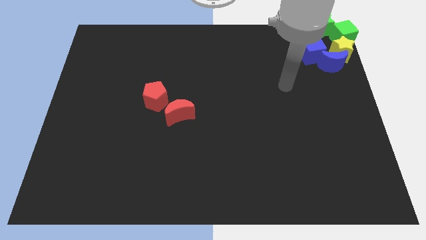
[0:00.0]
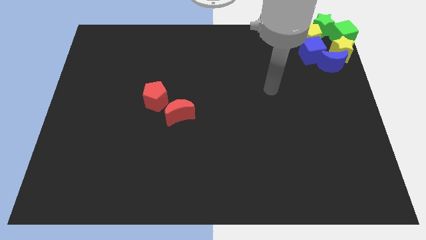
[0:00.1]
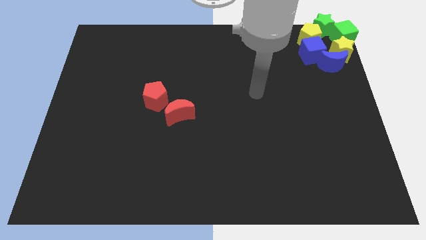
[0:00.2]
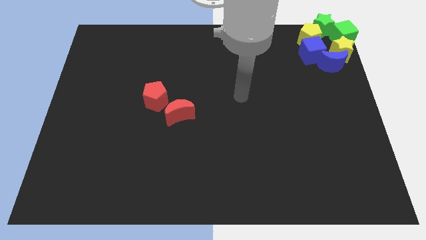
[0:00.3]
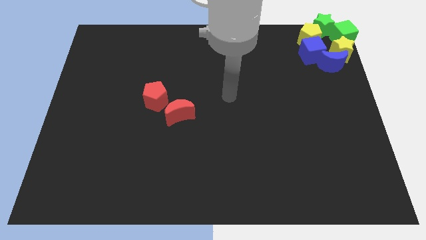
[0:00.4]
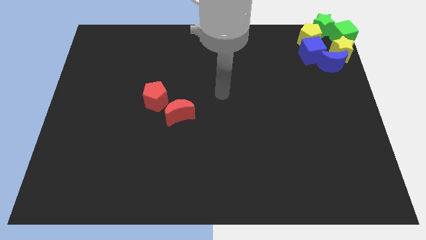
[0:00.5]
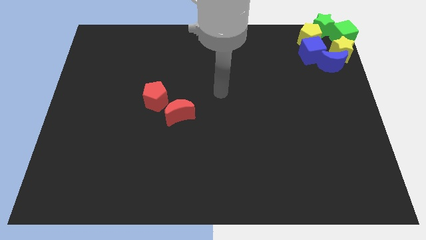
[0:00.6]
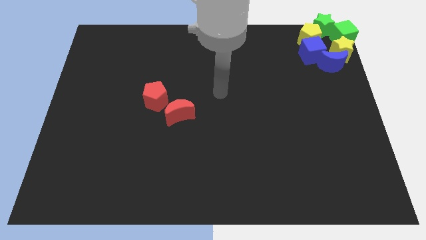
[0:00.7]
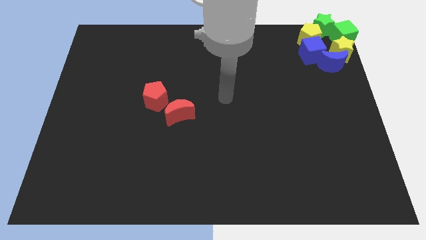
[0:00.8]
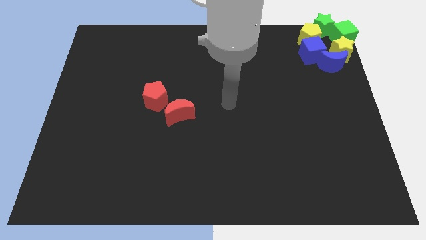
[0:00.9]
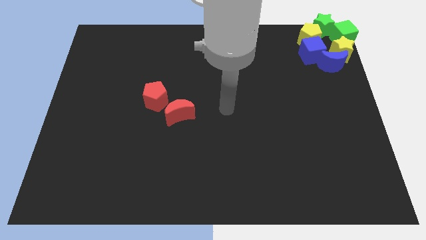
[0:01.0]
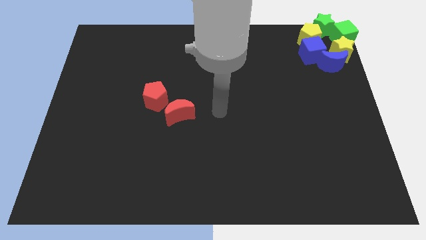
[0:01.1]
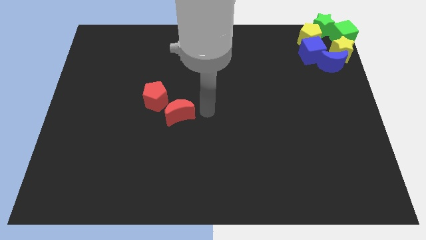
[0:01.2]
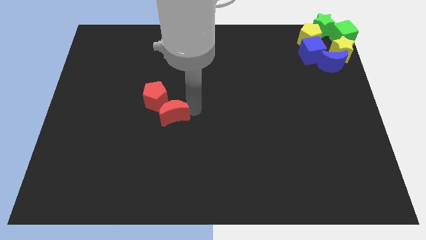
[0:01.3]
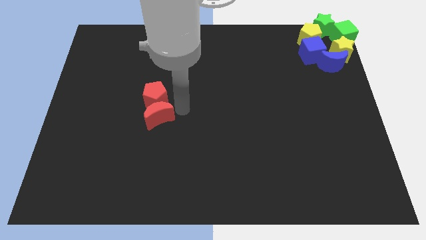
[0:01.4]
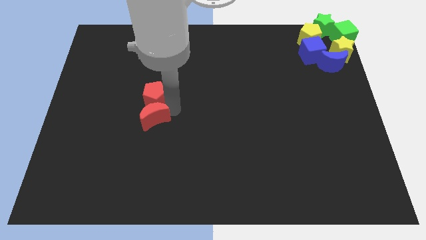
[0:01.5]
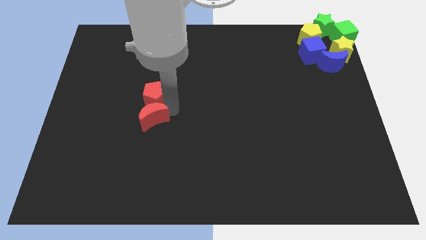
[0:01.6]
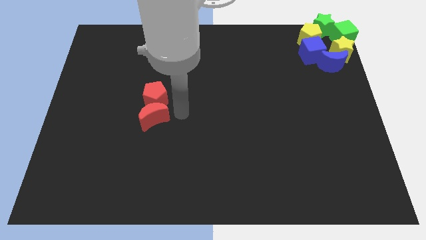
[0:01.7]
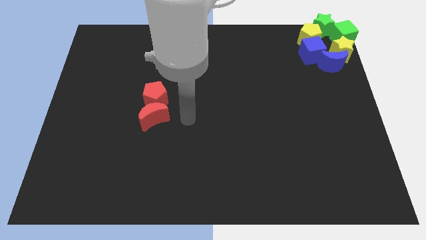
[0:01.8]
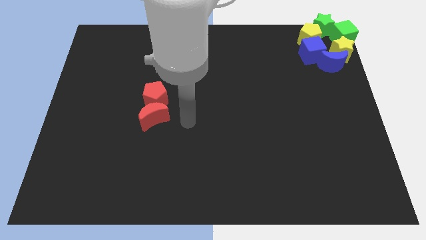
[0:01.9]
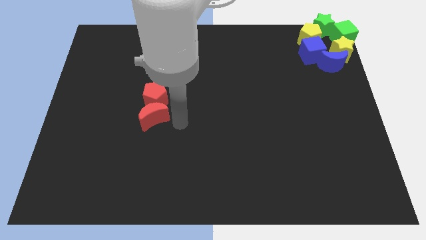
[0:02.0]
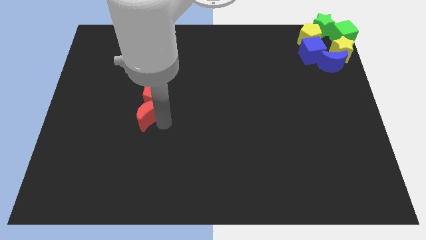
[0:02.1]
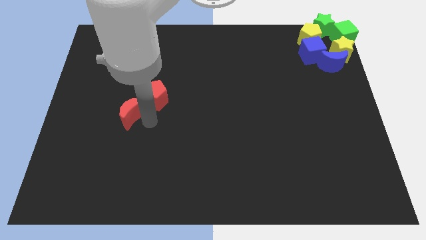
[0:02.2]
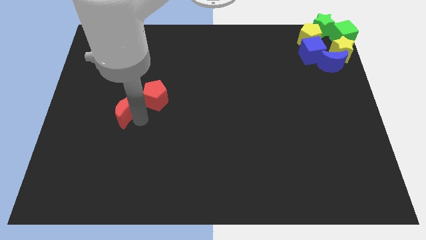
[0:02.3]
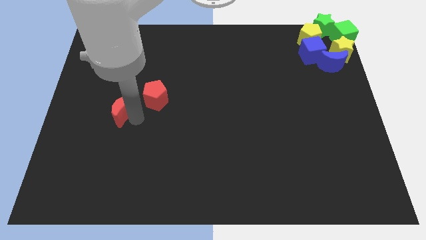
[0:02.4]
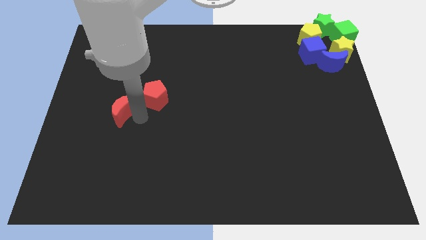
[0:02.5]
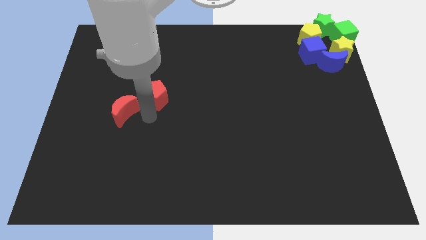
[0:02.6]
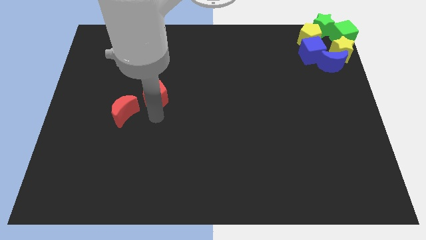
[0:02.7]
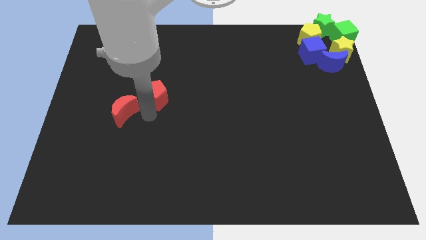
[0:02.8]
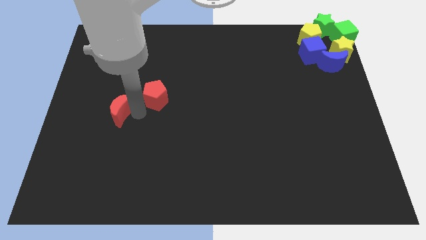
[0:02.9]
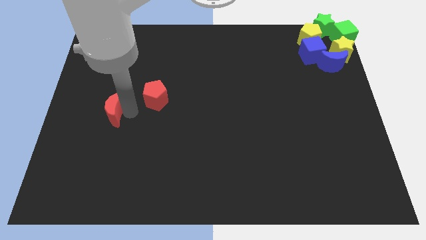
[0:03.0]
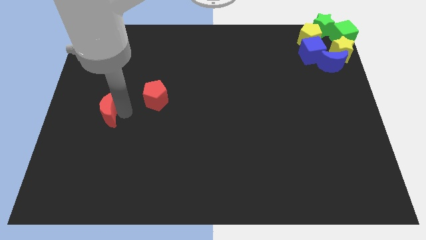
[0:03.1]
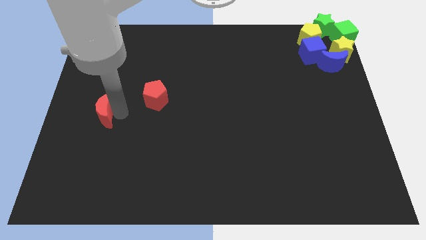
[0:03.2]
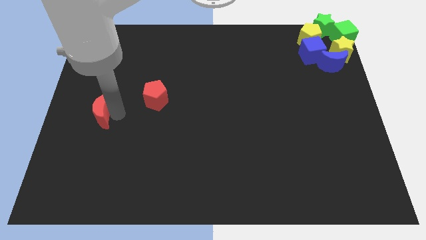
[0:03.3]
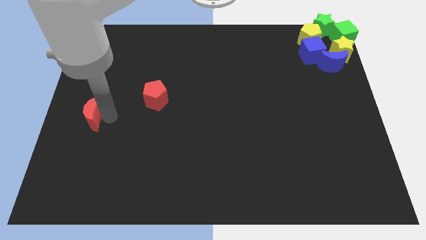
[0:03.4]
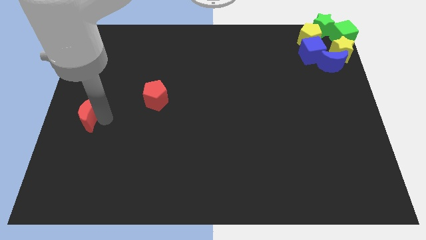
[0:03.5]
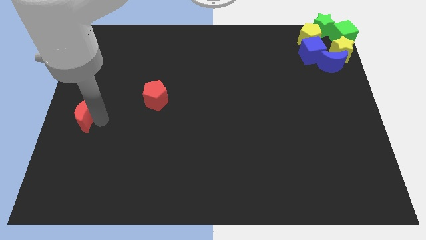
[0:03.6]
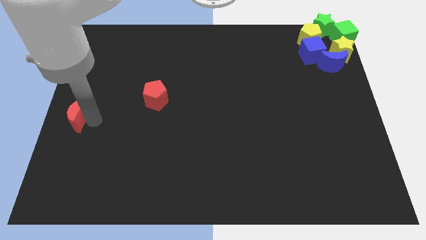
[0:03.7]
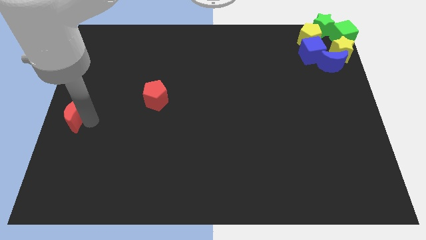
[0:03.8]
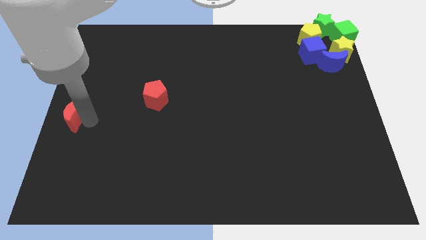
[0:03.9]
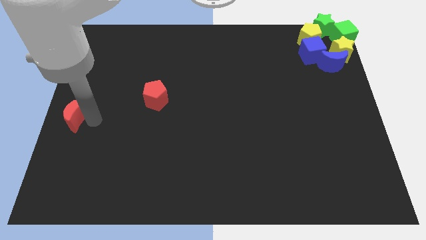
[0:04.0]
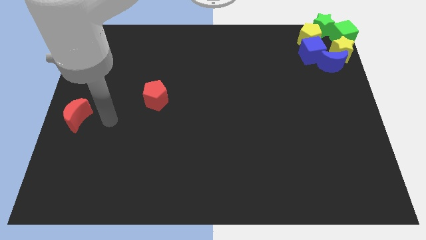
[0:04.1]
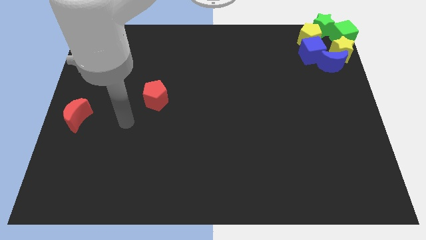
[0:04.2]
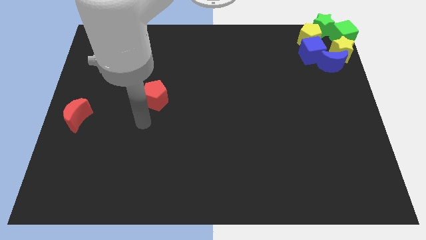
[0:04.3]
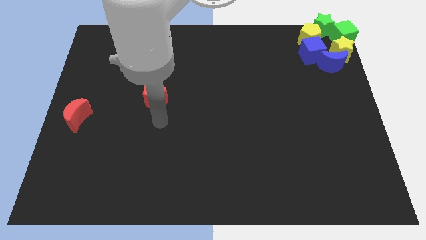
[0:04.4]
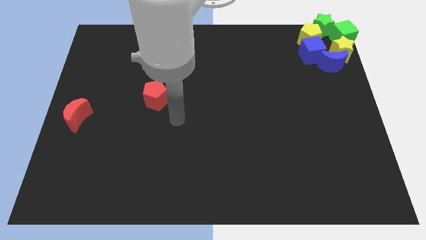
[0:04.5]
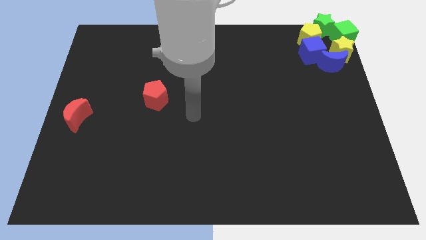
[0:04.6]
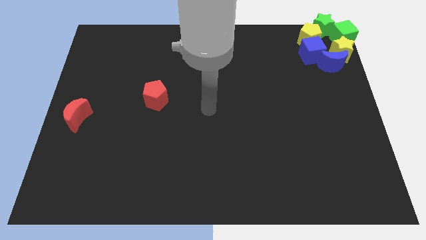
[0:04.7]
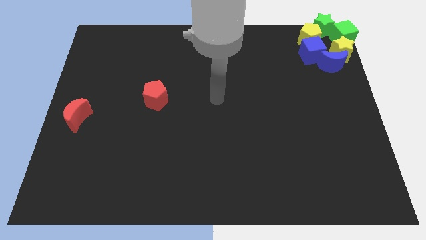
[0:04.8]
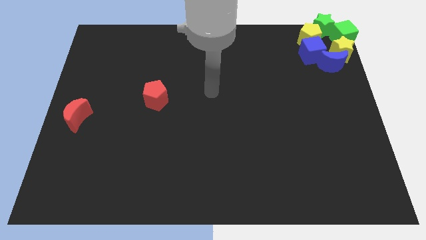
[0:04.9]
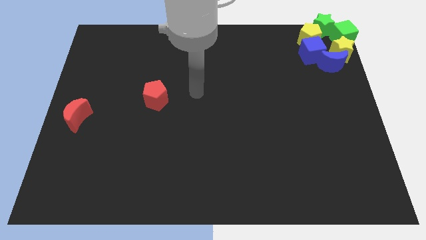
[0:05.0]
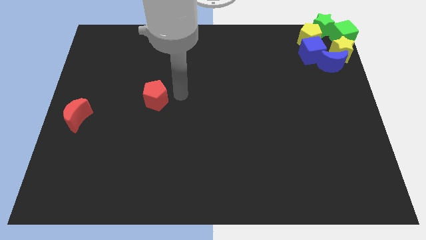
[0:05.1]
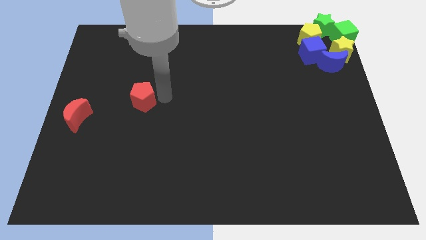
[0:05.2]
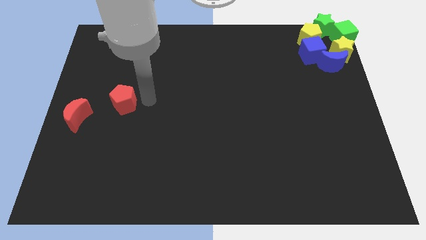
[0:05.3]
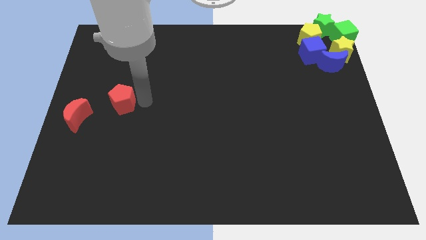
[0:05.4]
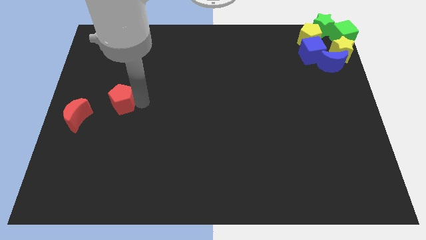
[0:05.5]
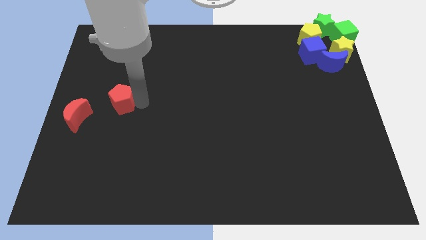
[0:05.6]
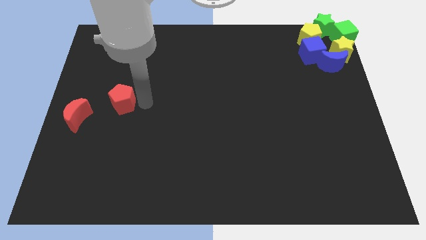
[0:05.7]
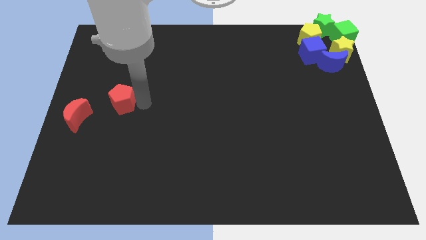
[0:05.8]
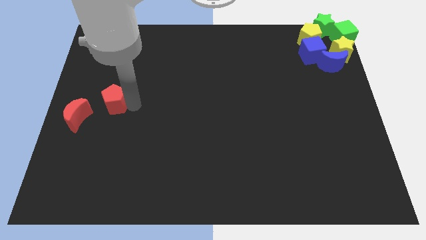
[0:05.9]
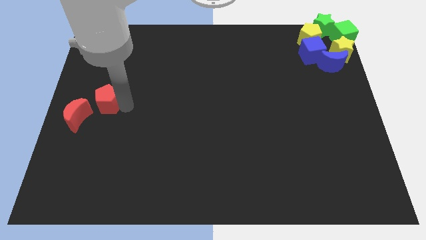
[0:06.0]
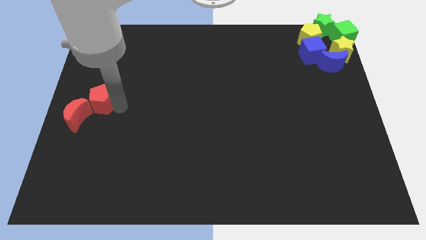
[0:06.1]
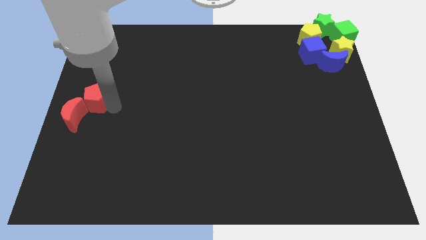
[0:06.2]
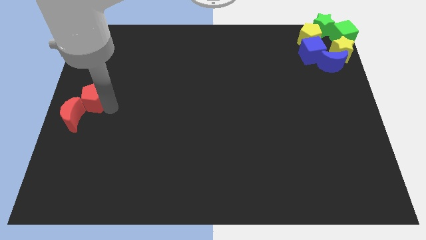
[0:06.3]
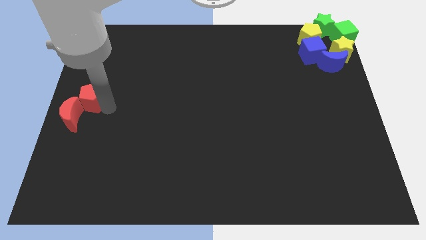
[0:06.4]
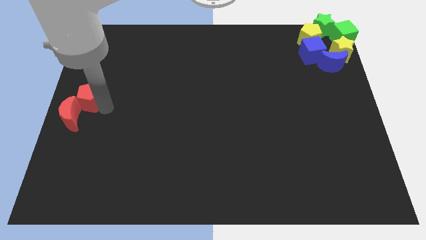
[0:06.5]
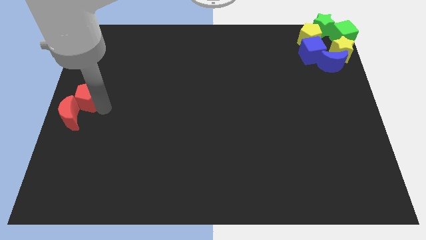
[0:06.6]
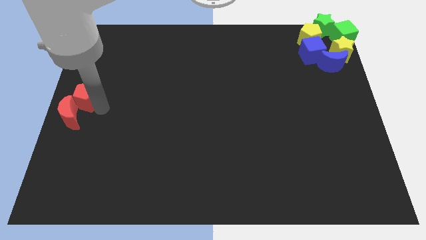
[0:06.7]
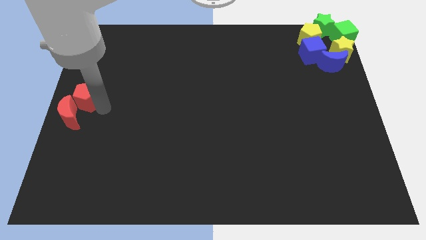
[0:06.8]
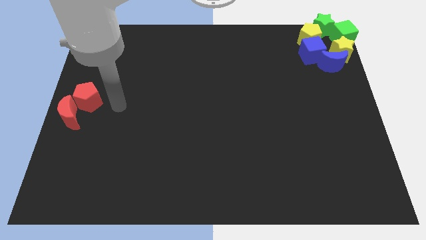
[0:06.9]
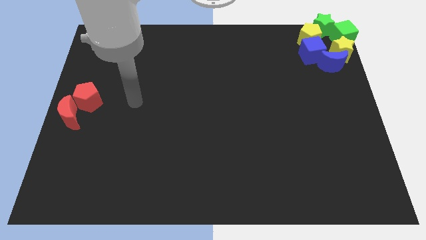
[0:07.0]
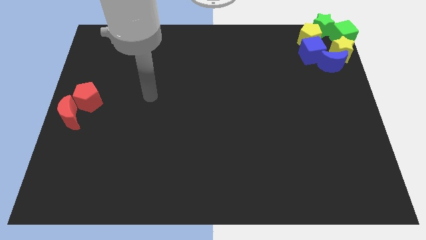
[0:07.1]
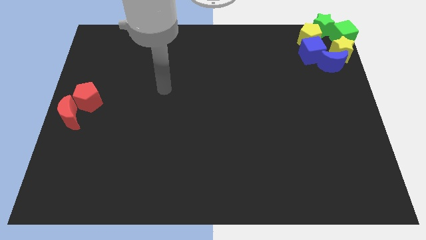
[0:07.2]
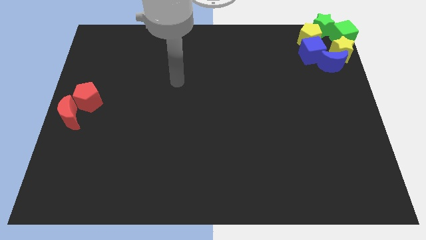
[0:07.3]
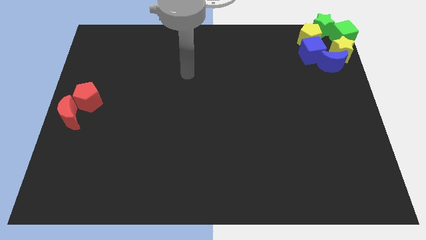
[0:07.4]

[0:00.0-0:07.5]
push the red blocks to the center left

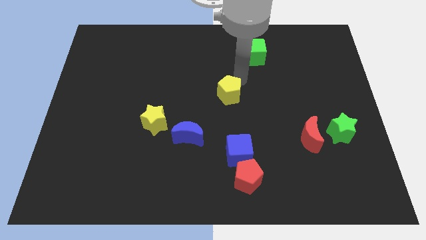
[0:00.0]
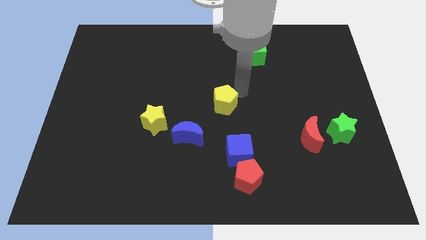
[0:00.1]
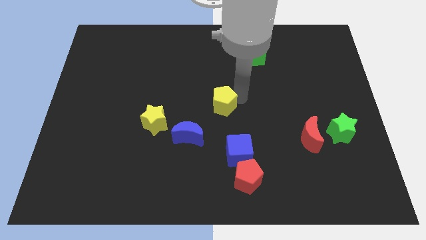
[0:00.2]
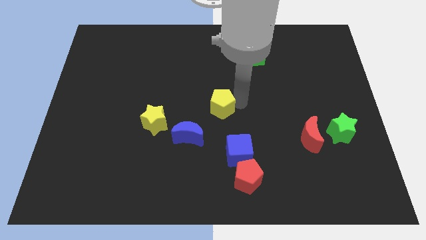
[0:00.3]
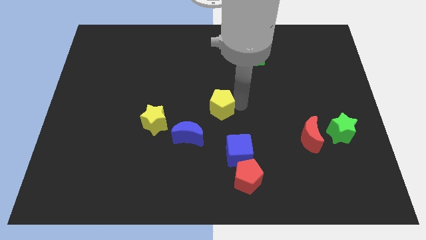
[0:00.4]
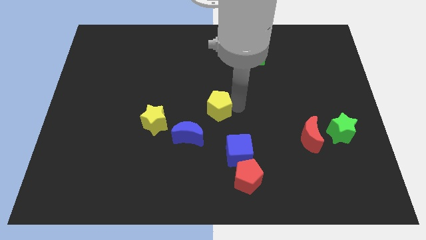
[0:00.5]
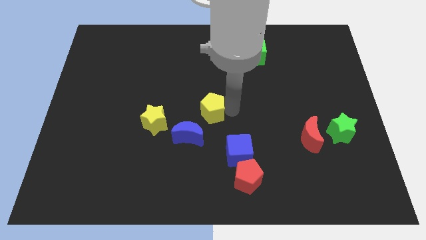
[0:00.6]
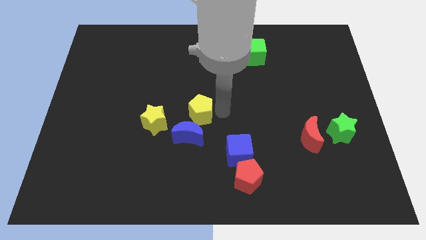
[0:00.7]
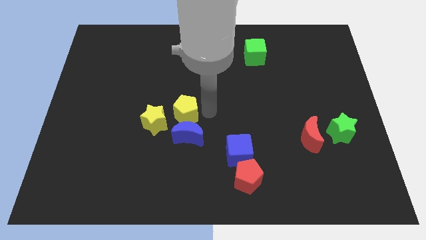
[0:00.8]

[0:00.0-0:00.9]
place the yellow pentagon above the blue crescent

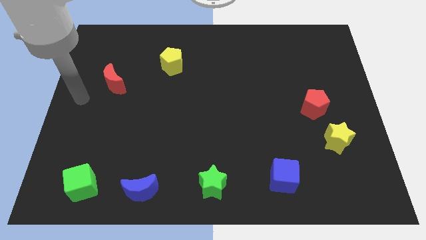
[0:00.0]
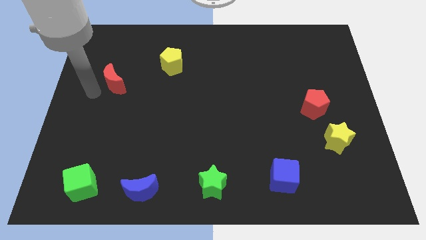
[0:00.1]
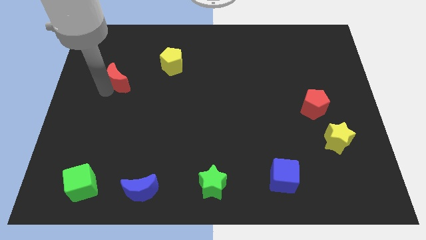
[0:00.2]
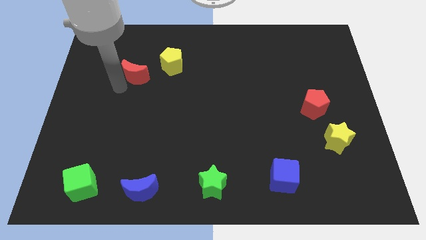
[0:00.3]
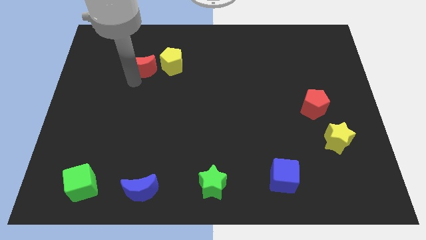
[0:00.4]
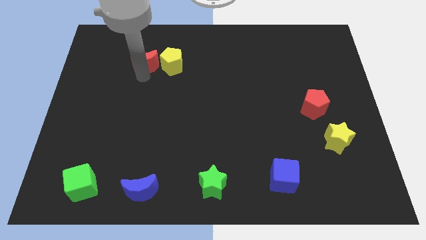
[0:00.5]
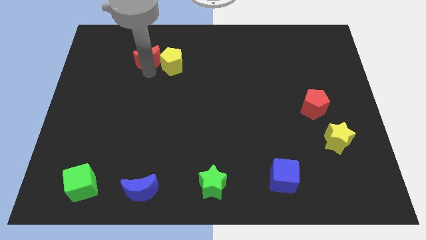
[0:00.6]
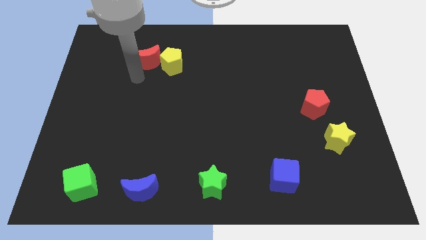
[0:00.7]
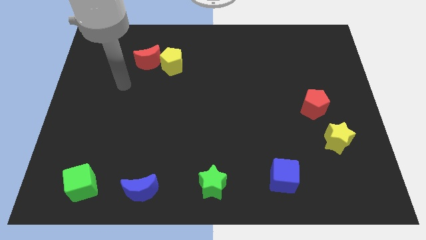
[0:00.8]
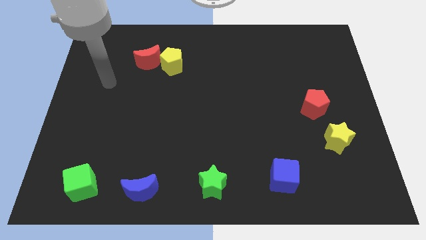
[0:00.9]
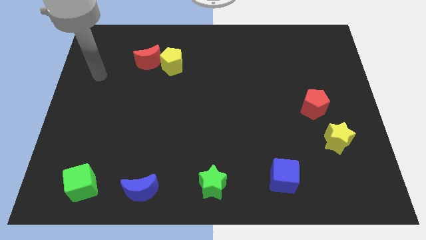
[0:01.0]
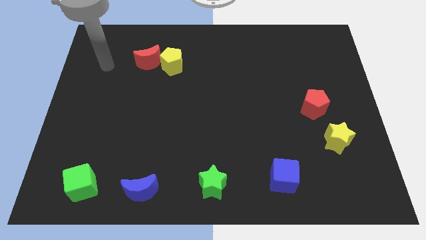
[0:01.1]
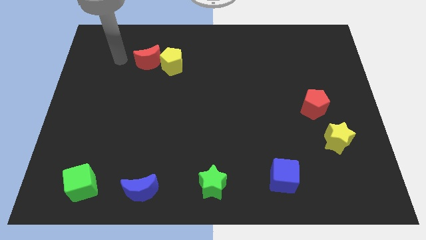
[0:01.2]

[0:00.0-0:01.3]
push the red crescent to the left of the yellow pentagon
